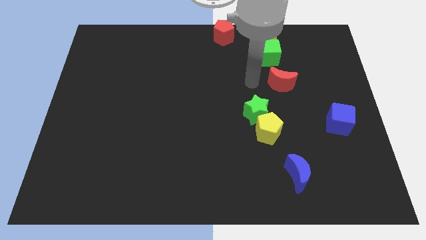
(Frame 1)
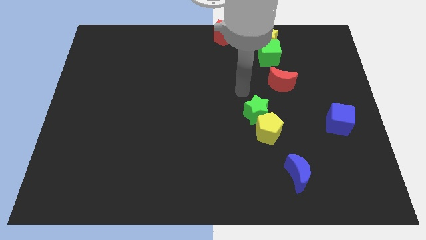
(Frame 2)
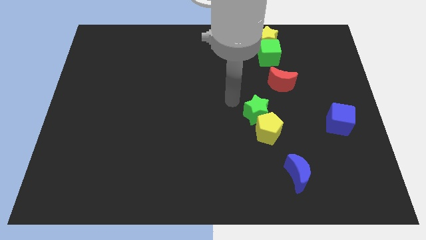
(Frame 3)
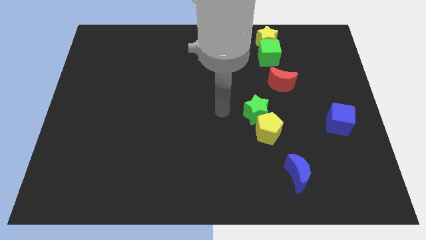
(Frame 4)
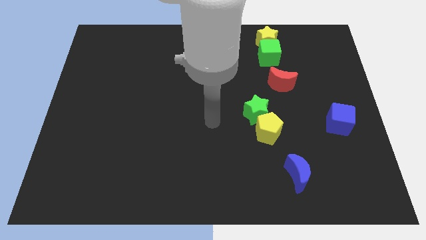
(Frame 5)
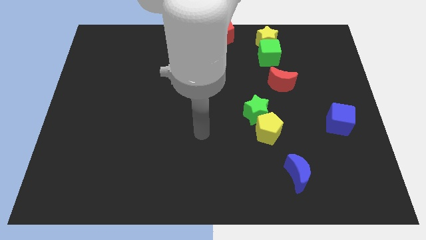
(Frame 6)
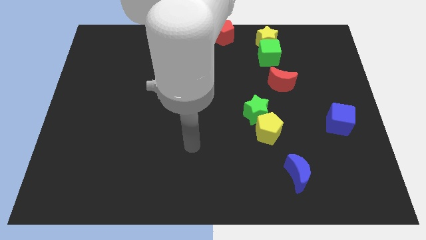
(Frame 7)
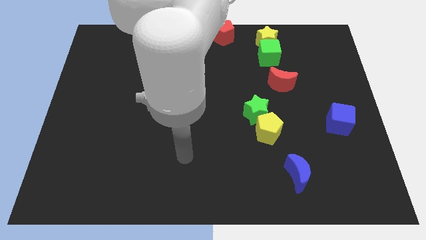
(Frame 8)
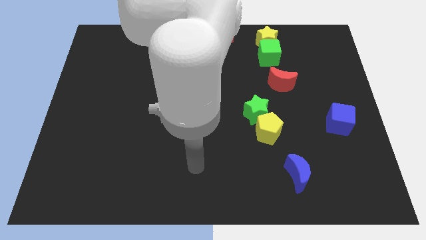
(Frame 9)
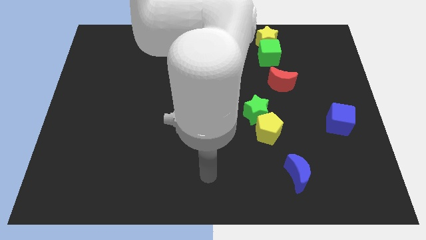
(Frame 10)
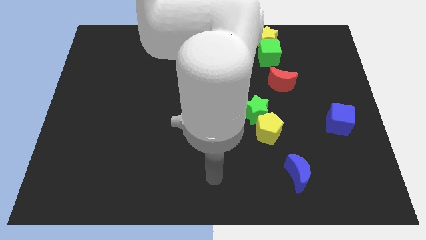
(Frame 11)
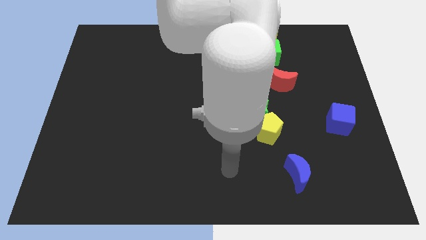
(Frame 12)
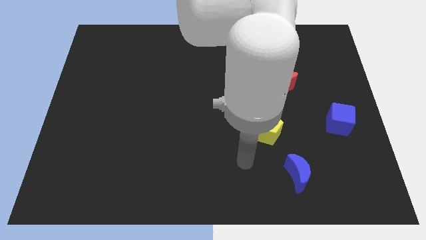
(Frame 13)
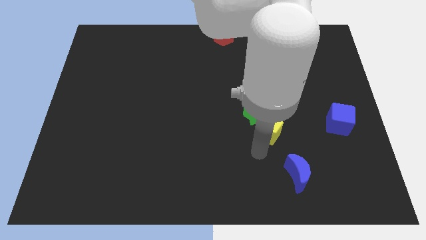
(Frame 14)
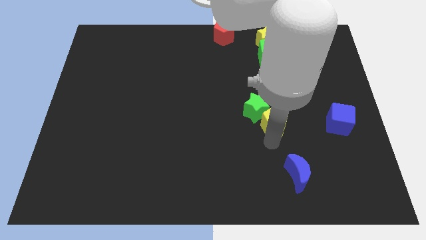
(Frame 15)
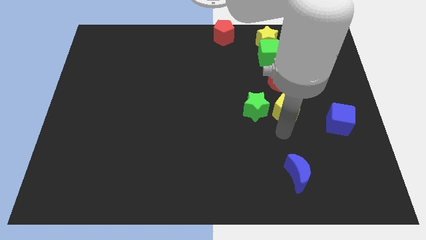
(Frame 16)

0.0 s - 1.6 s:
move the yellow pentagon to the right of the green star

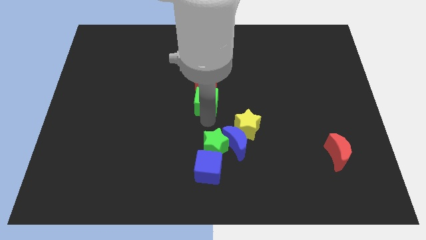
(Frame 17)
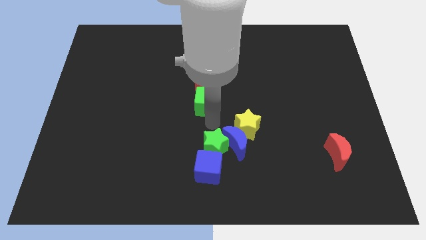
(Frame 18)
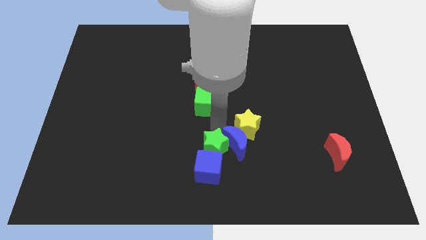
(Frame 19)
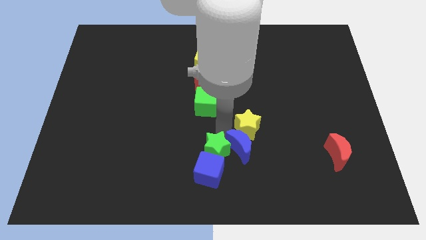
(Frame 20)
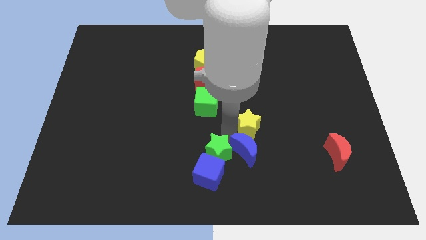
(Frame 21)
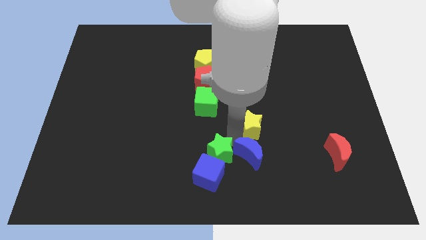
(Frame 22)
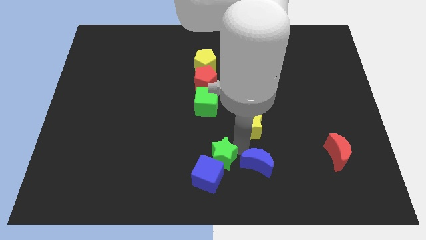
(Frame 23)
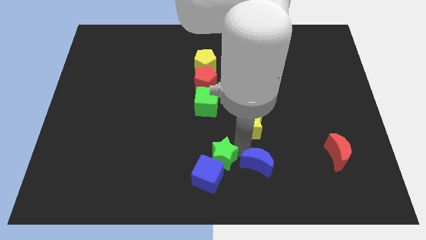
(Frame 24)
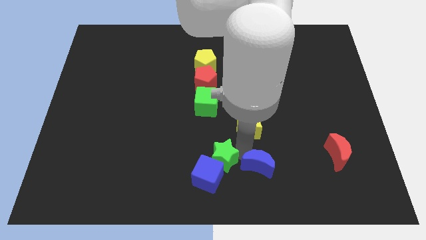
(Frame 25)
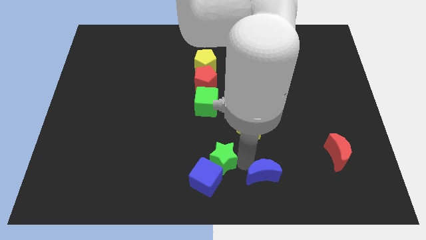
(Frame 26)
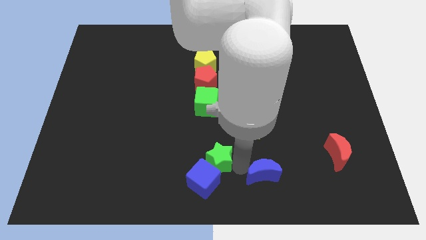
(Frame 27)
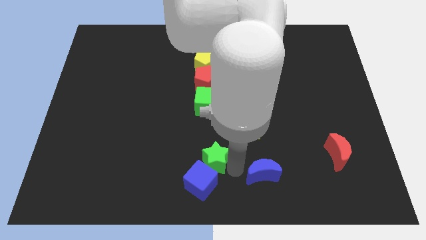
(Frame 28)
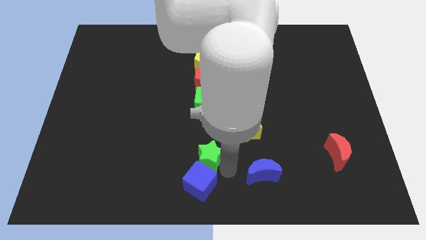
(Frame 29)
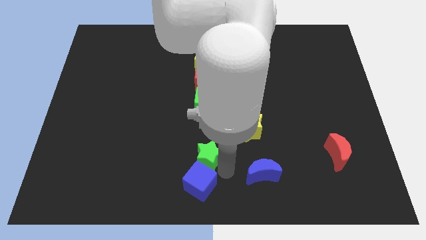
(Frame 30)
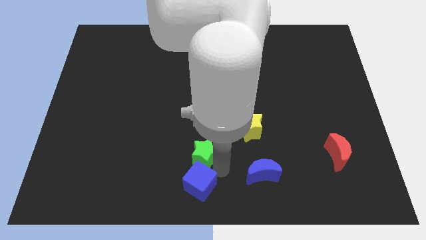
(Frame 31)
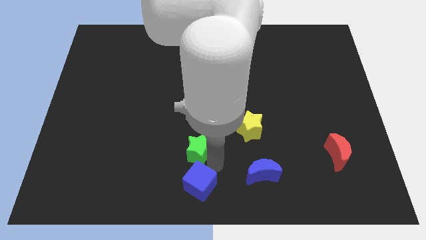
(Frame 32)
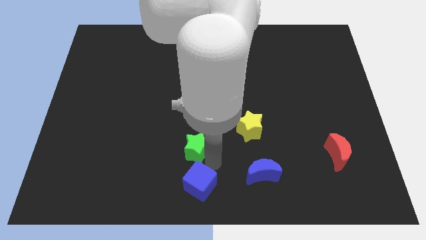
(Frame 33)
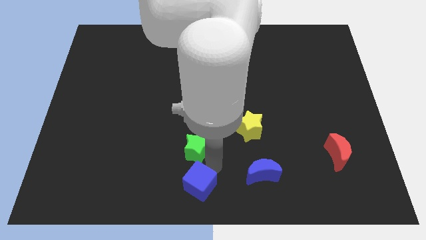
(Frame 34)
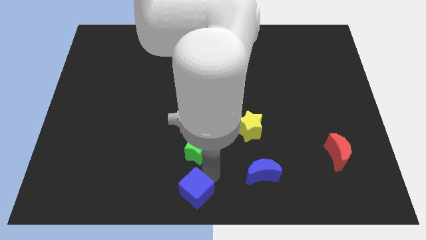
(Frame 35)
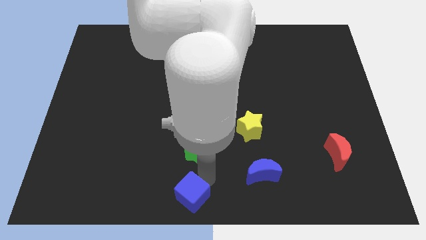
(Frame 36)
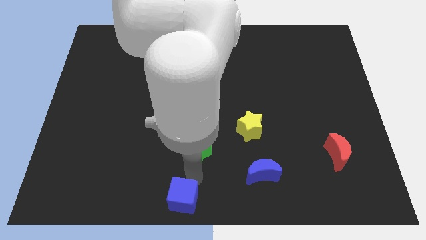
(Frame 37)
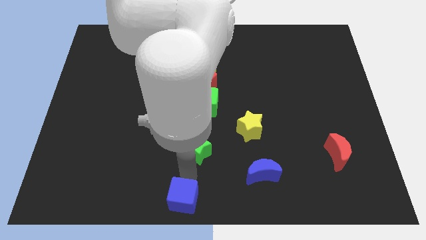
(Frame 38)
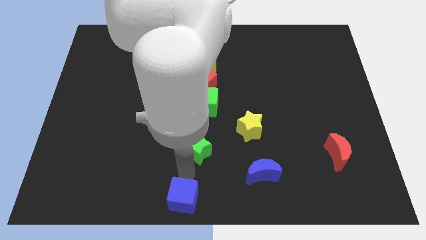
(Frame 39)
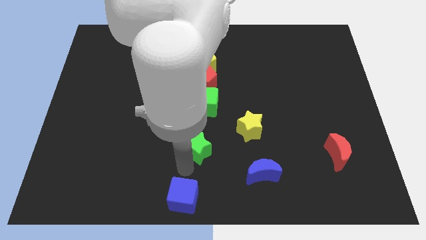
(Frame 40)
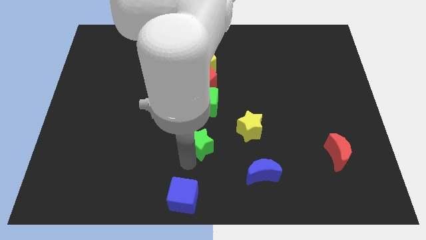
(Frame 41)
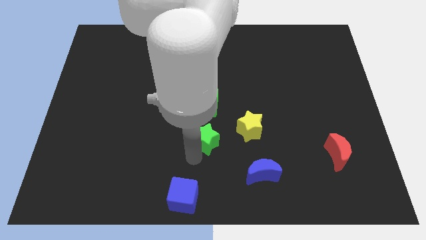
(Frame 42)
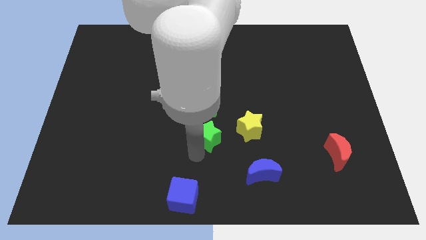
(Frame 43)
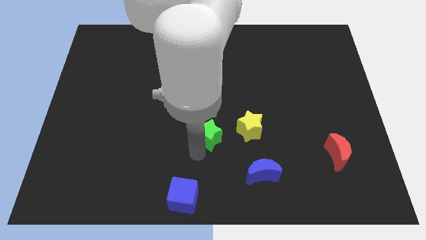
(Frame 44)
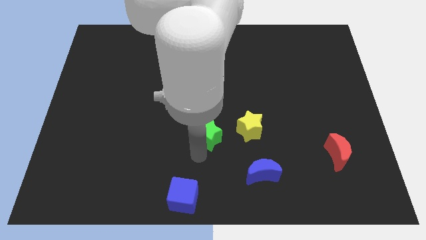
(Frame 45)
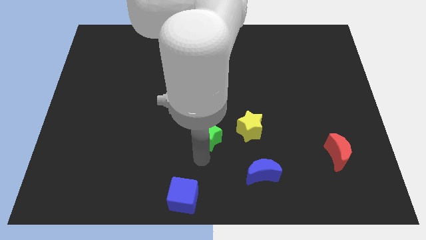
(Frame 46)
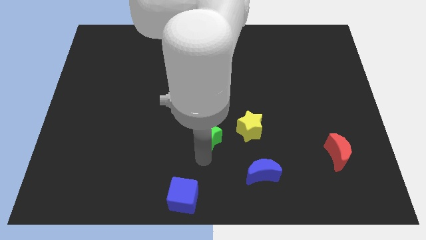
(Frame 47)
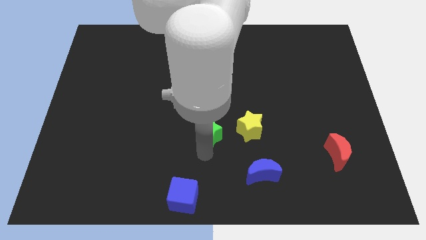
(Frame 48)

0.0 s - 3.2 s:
make a triangle out of blue blocks and the green star

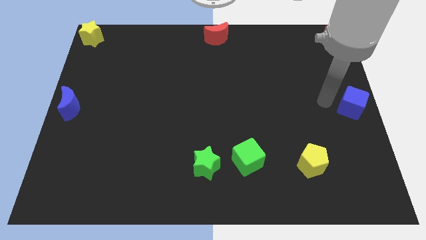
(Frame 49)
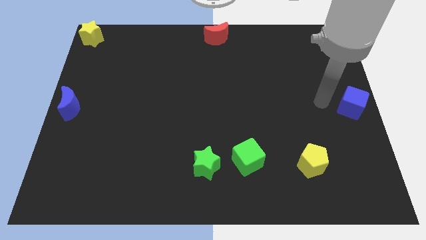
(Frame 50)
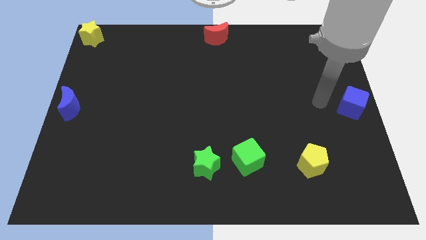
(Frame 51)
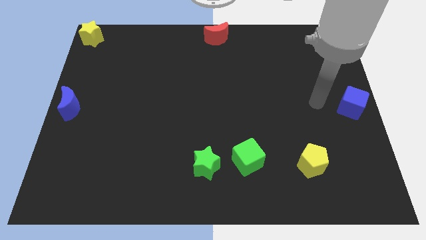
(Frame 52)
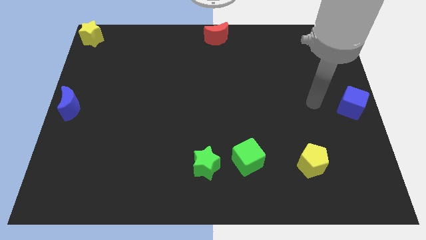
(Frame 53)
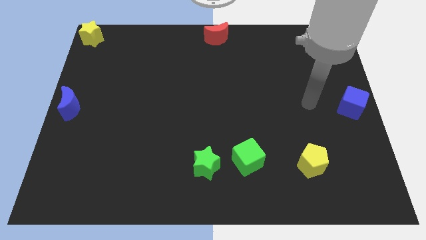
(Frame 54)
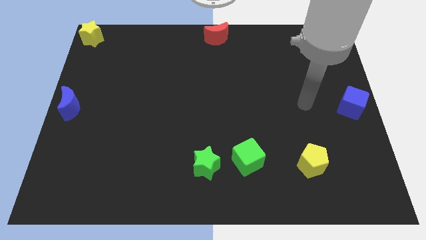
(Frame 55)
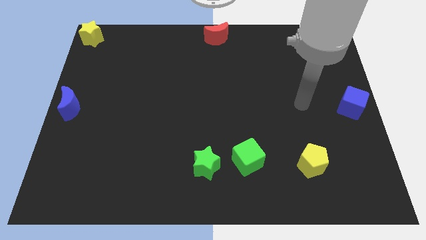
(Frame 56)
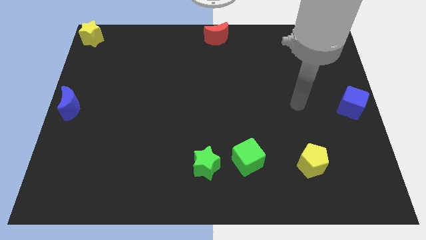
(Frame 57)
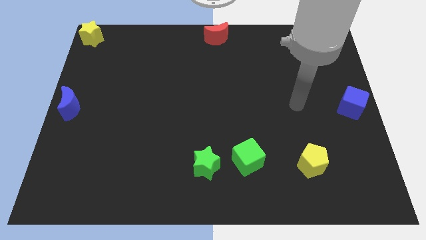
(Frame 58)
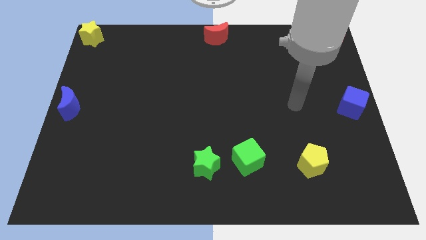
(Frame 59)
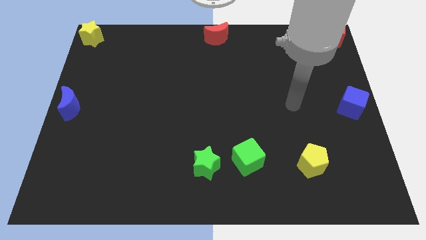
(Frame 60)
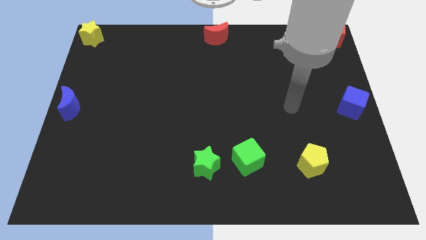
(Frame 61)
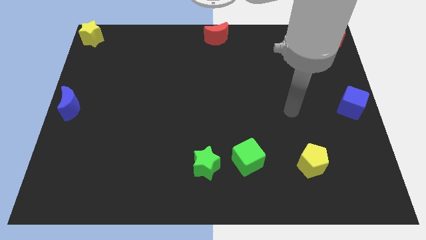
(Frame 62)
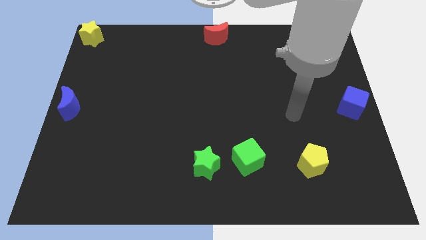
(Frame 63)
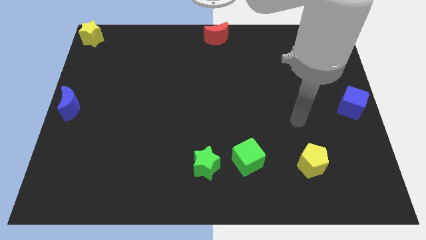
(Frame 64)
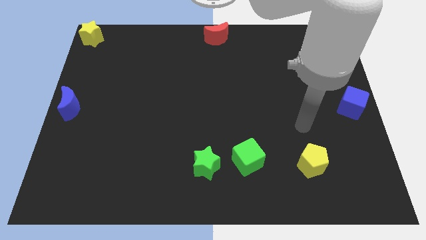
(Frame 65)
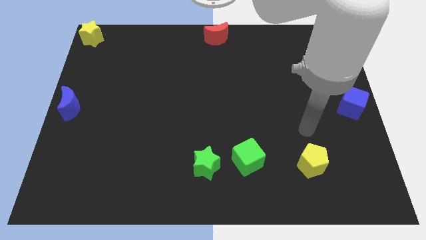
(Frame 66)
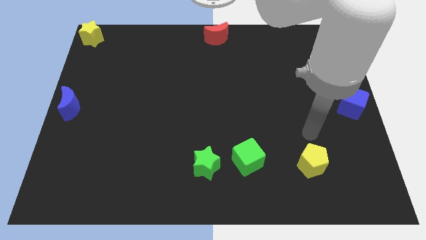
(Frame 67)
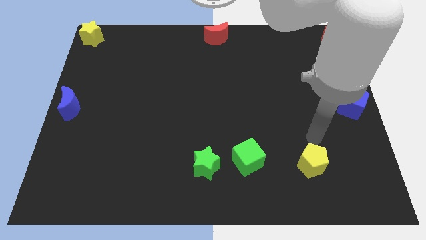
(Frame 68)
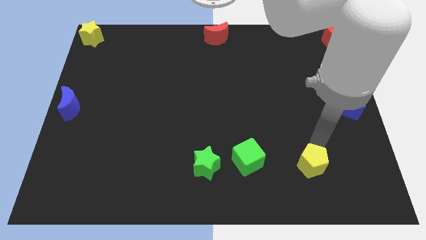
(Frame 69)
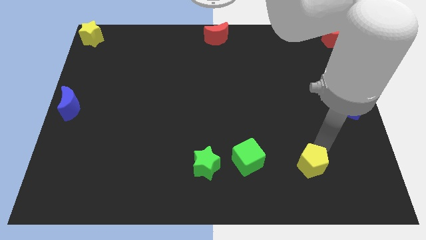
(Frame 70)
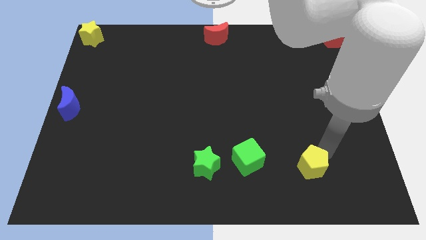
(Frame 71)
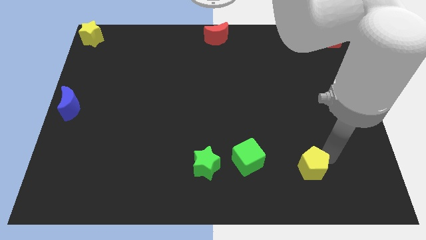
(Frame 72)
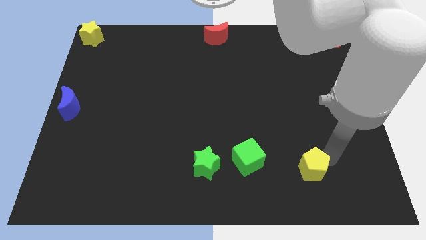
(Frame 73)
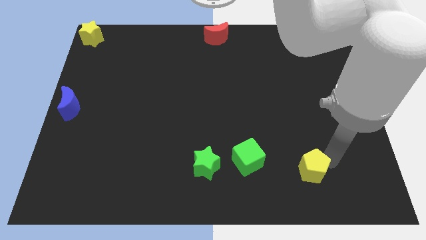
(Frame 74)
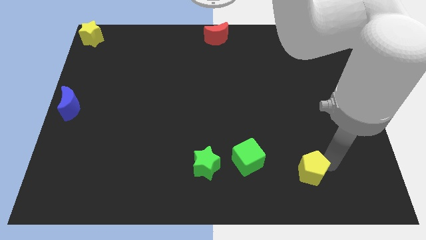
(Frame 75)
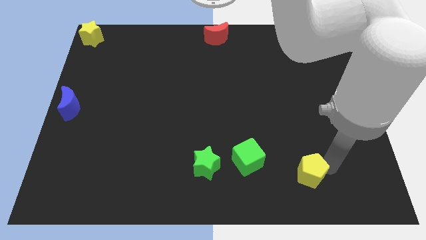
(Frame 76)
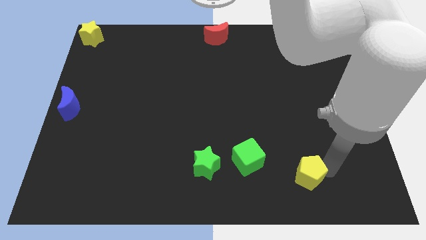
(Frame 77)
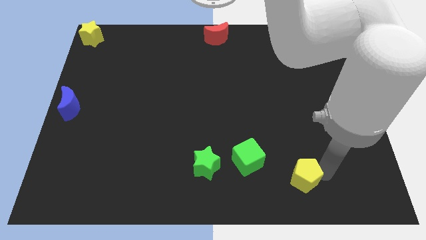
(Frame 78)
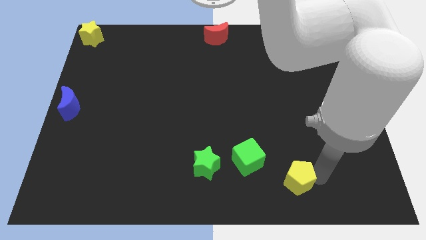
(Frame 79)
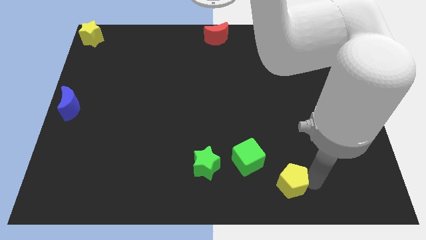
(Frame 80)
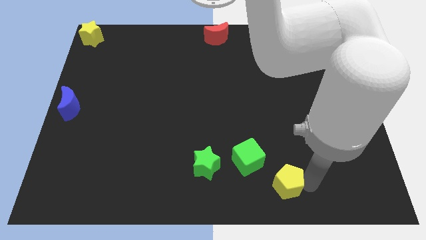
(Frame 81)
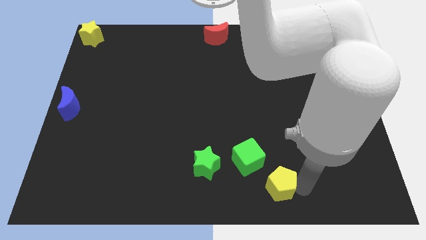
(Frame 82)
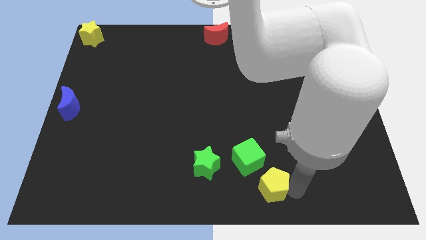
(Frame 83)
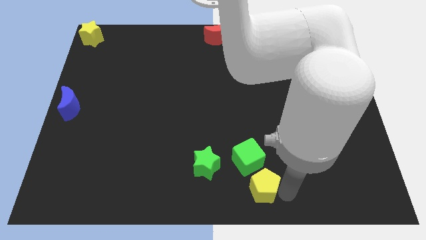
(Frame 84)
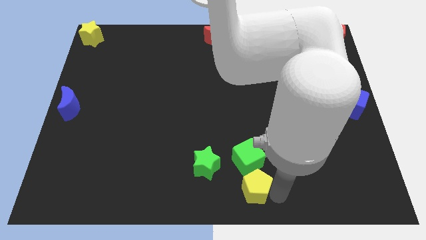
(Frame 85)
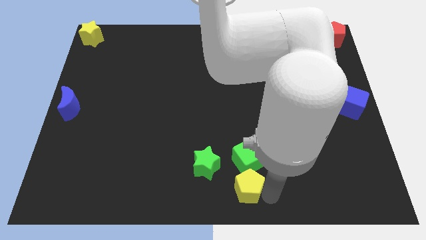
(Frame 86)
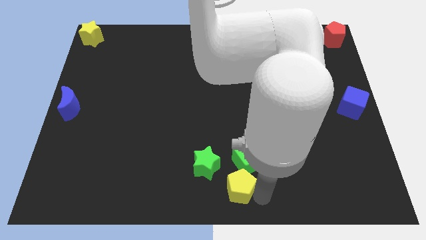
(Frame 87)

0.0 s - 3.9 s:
put the yellow pentagon below the green cube

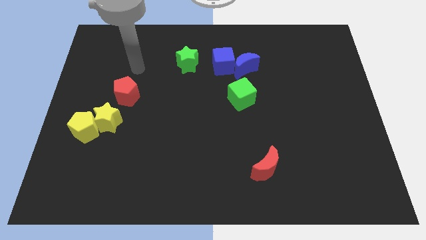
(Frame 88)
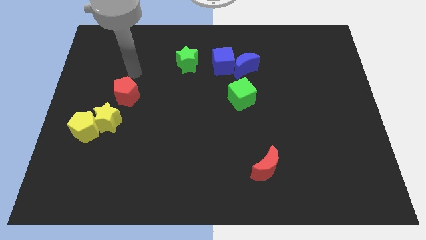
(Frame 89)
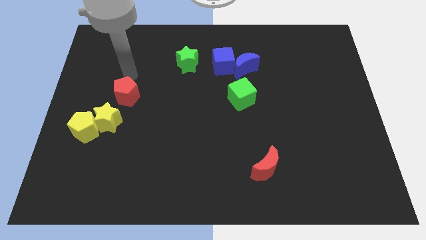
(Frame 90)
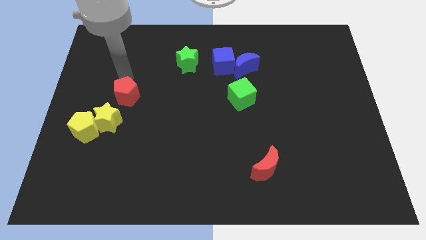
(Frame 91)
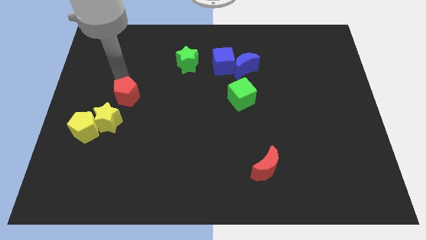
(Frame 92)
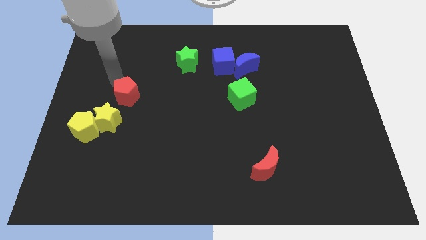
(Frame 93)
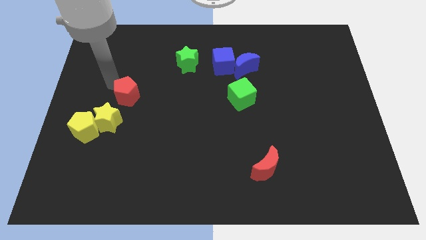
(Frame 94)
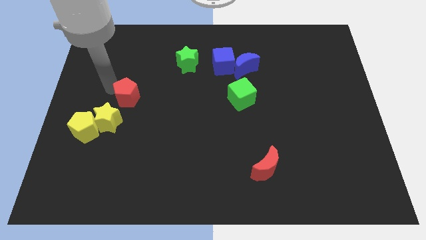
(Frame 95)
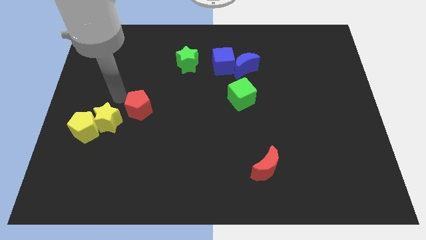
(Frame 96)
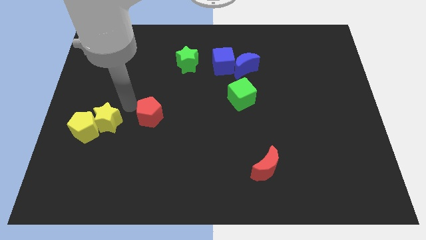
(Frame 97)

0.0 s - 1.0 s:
push red pentagon diagonally above yellow star
